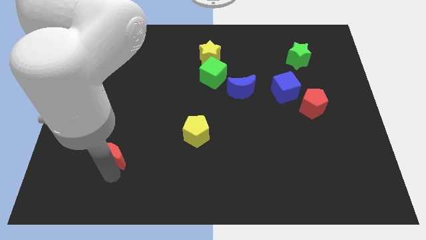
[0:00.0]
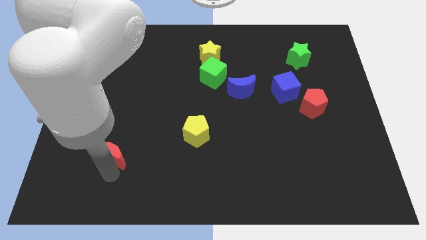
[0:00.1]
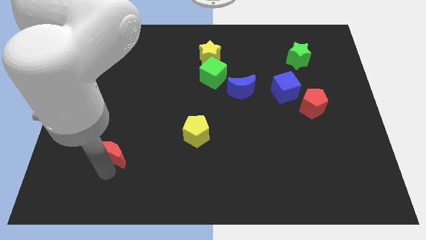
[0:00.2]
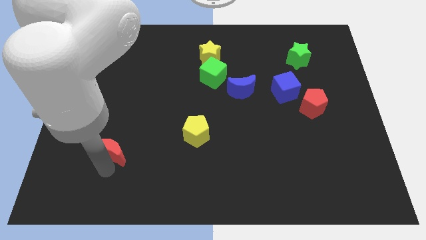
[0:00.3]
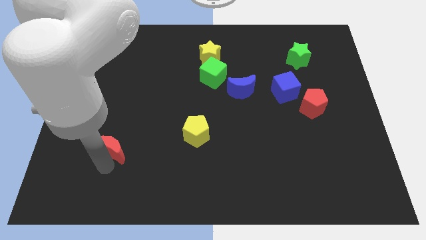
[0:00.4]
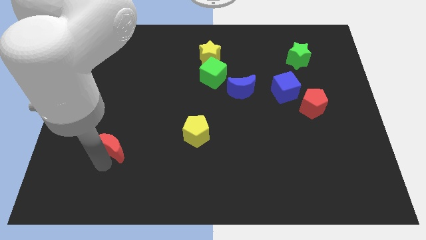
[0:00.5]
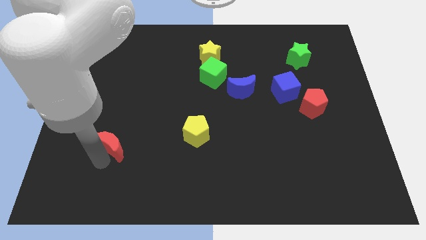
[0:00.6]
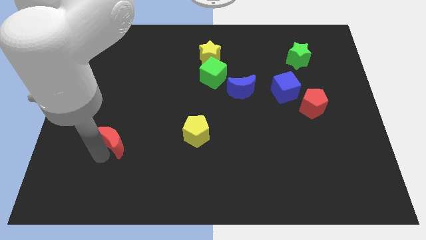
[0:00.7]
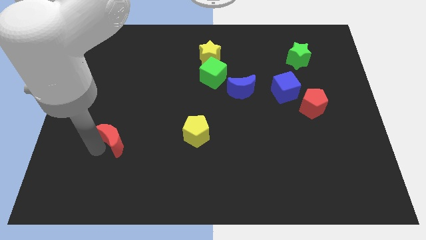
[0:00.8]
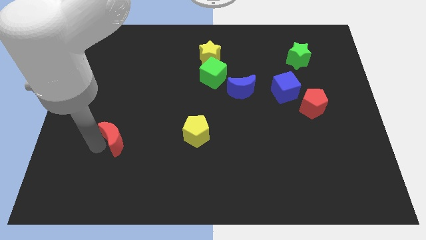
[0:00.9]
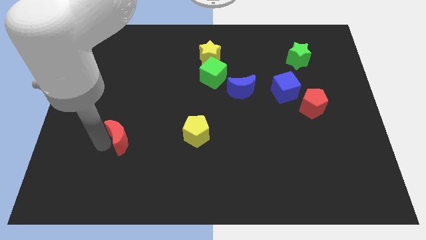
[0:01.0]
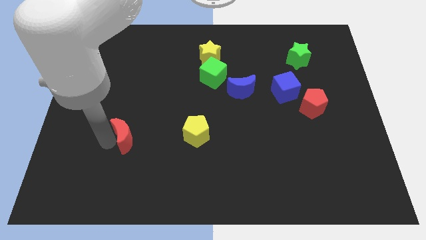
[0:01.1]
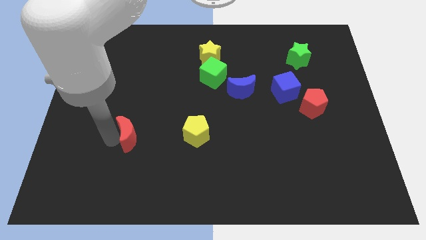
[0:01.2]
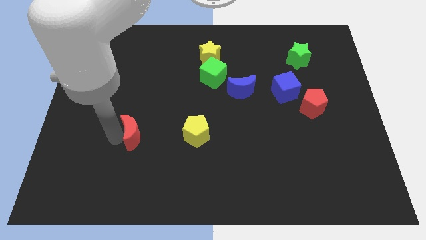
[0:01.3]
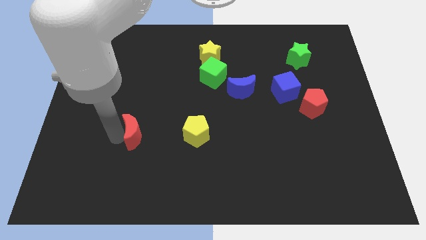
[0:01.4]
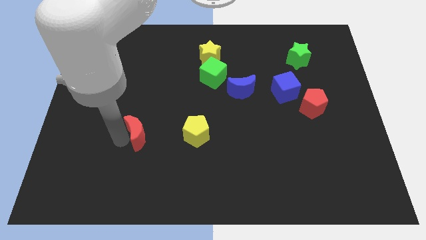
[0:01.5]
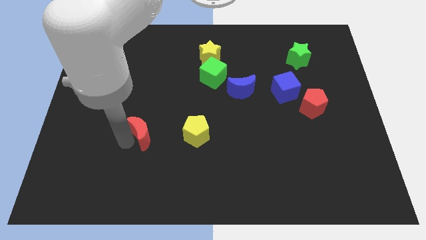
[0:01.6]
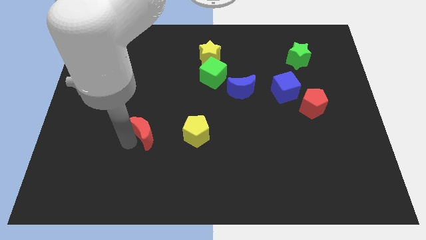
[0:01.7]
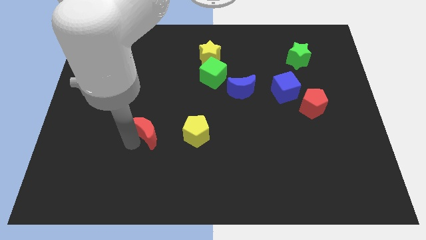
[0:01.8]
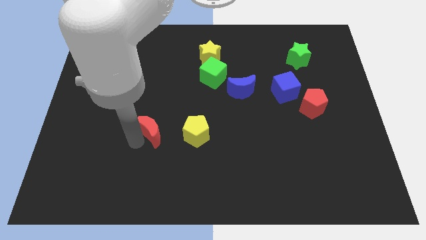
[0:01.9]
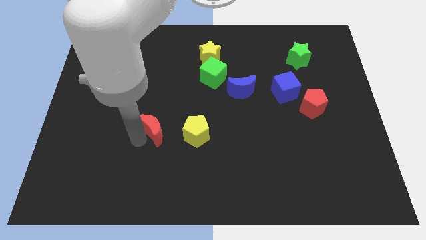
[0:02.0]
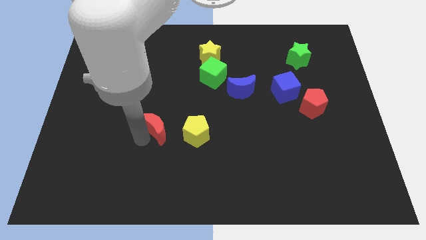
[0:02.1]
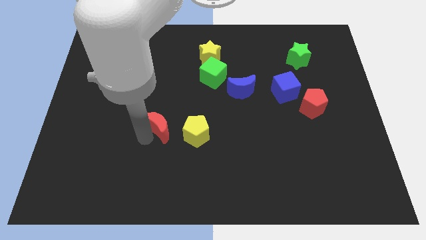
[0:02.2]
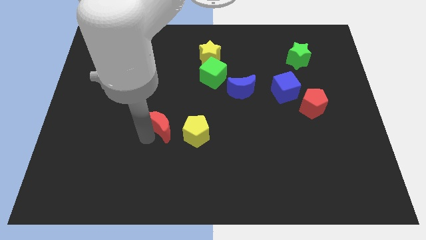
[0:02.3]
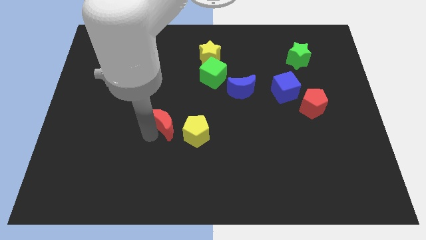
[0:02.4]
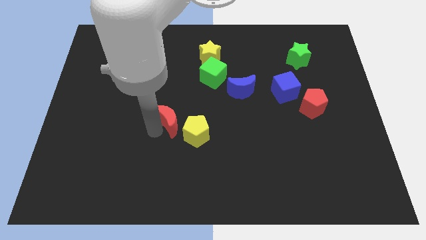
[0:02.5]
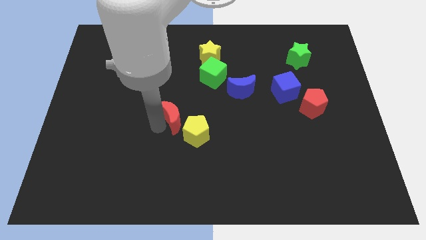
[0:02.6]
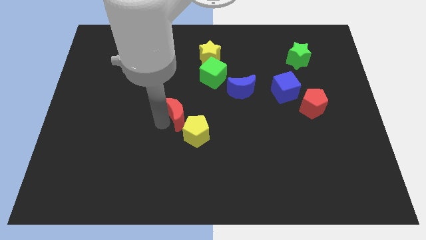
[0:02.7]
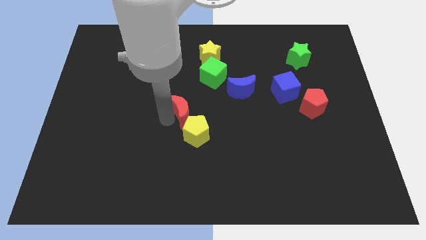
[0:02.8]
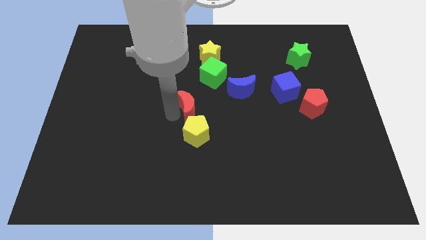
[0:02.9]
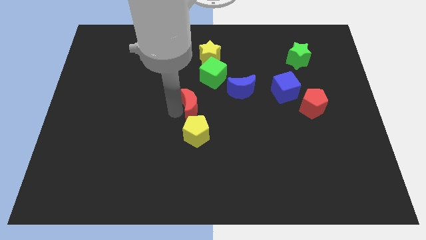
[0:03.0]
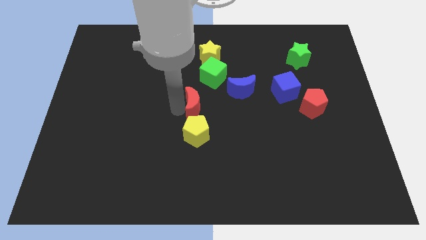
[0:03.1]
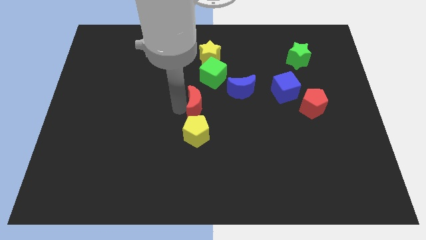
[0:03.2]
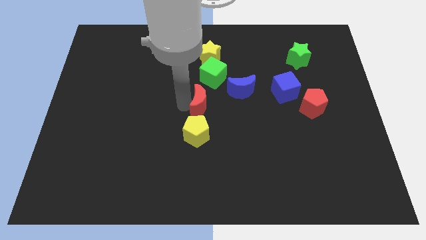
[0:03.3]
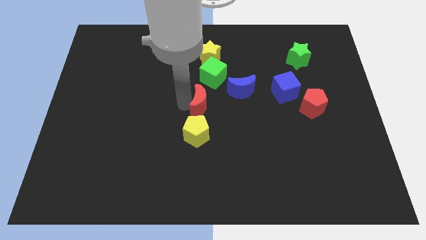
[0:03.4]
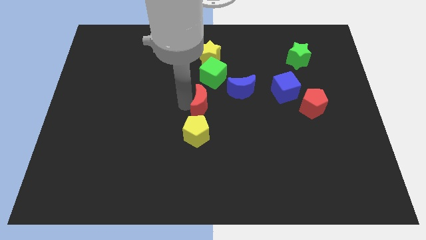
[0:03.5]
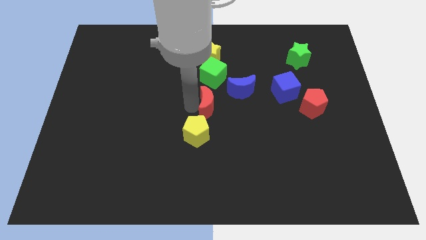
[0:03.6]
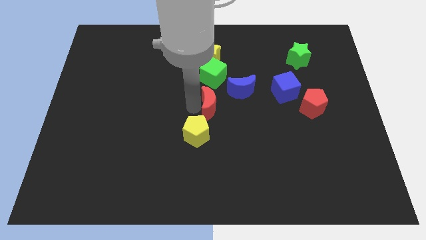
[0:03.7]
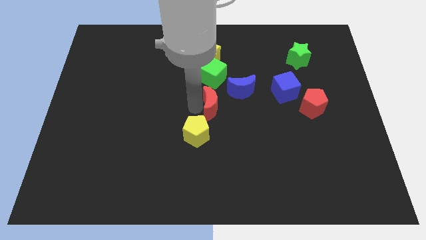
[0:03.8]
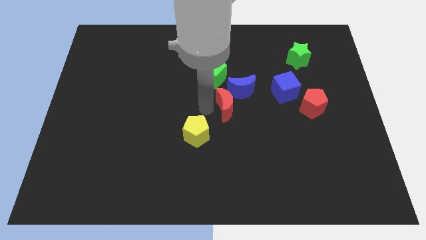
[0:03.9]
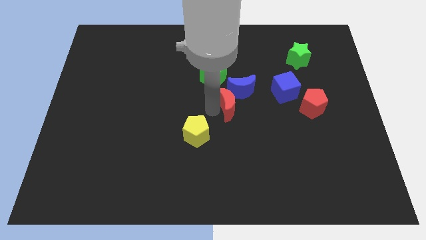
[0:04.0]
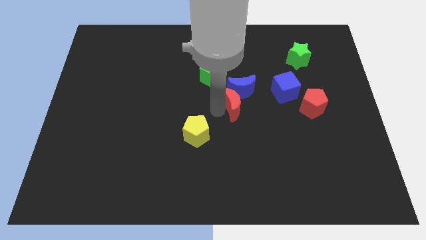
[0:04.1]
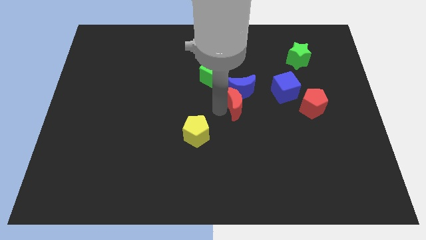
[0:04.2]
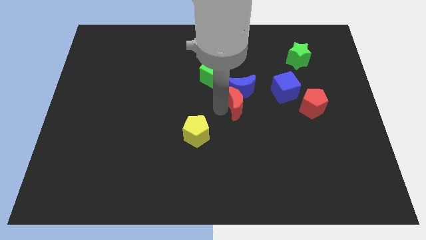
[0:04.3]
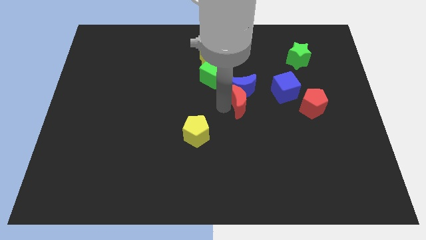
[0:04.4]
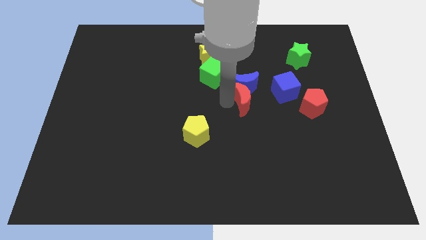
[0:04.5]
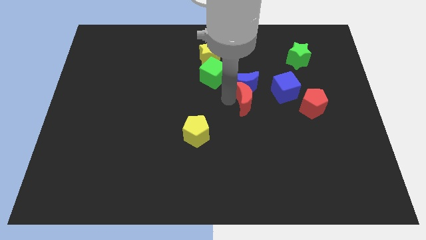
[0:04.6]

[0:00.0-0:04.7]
place the red crescent close to blue crescent

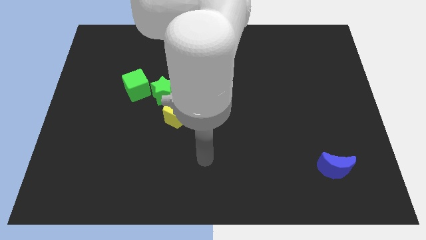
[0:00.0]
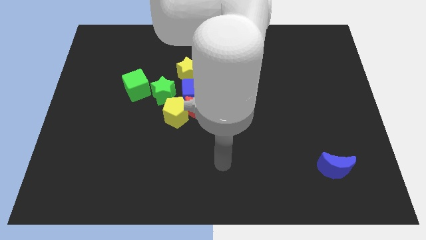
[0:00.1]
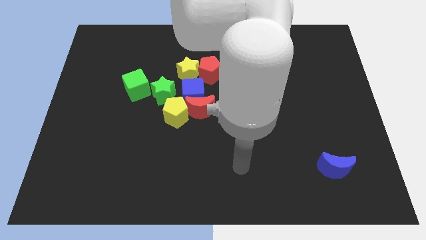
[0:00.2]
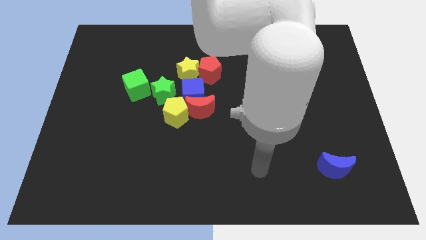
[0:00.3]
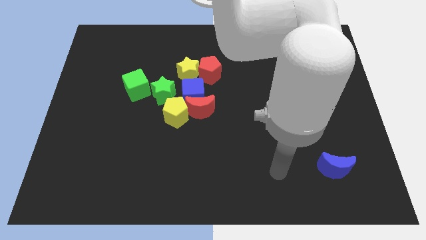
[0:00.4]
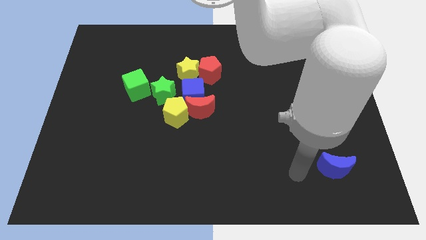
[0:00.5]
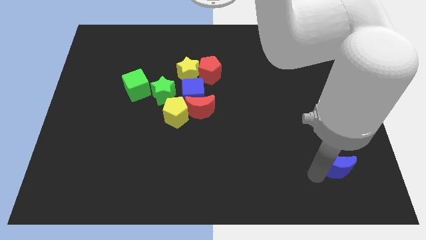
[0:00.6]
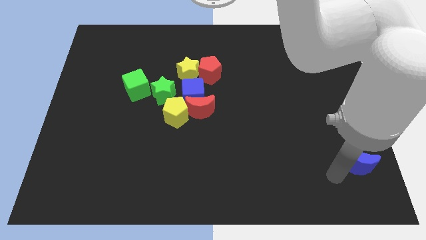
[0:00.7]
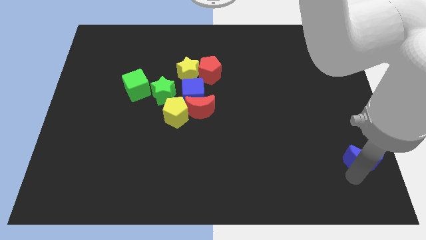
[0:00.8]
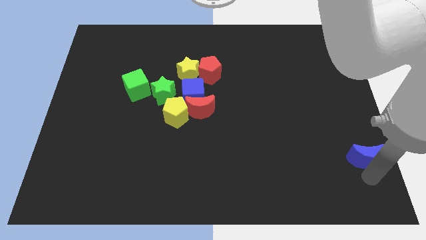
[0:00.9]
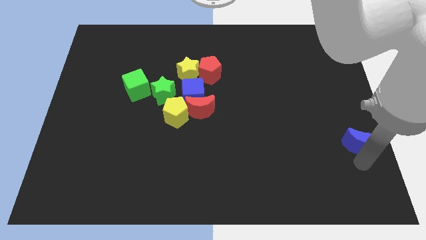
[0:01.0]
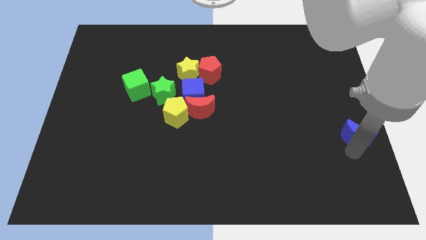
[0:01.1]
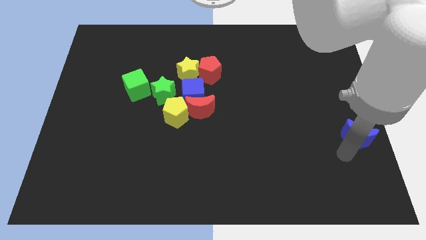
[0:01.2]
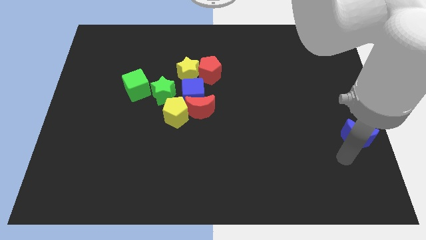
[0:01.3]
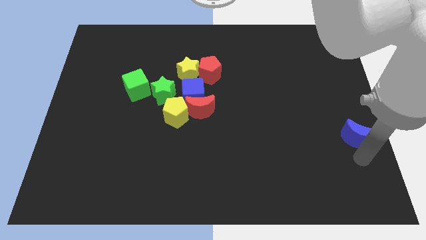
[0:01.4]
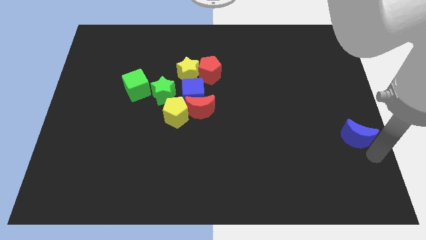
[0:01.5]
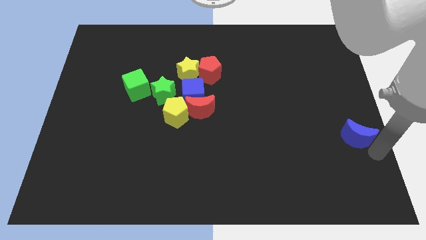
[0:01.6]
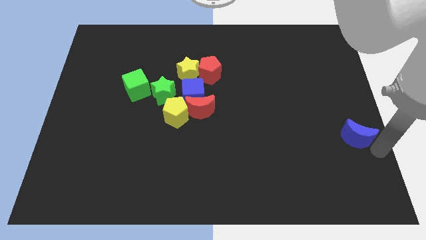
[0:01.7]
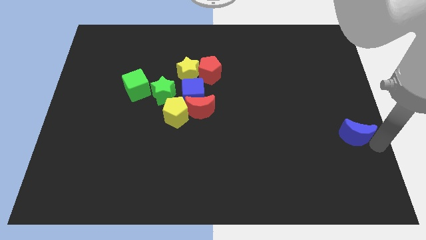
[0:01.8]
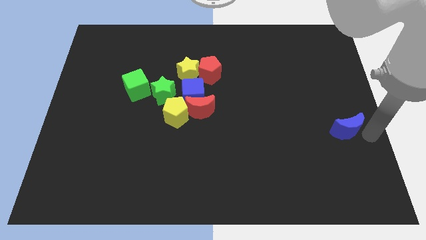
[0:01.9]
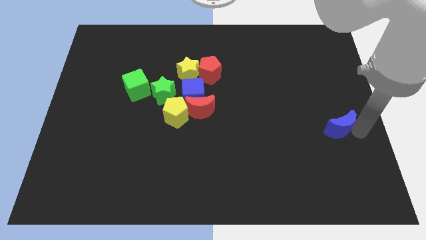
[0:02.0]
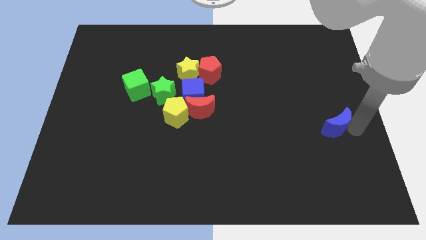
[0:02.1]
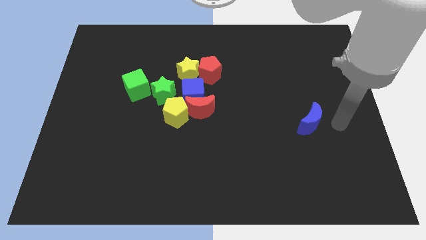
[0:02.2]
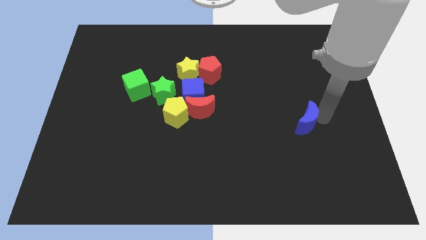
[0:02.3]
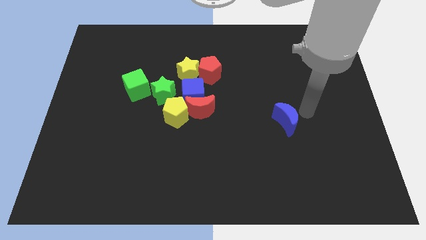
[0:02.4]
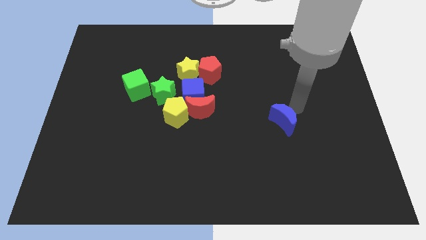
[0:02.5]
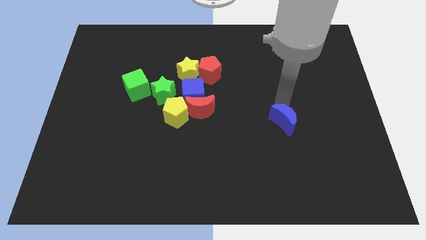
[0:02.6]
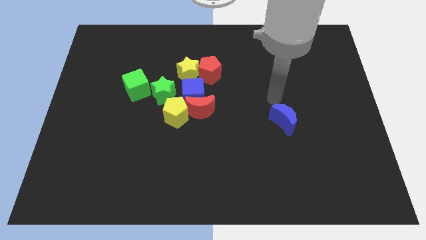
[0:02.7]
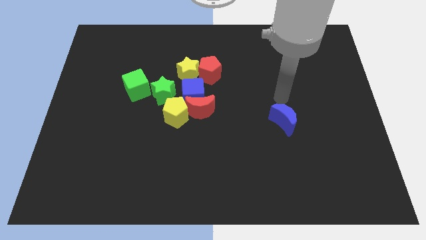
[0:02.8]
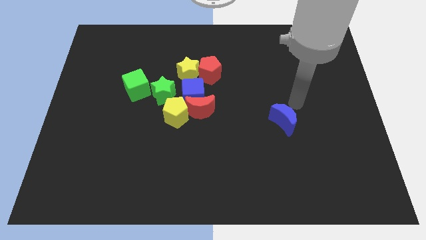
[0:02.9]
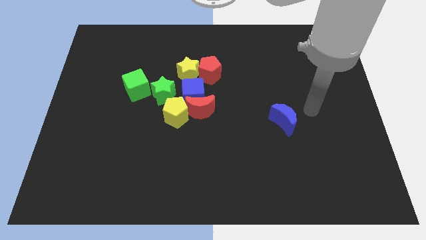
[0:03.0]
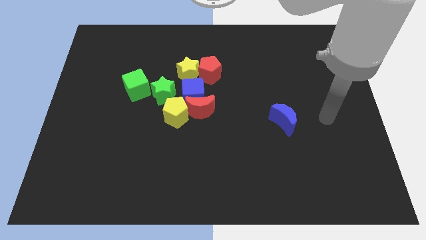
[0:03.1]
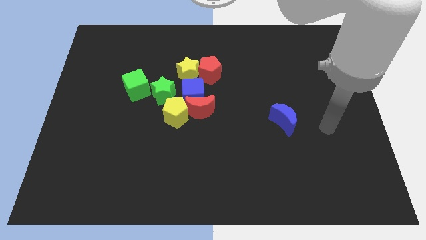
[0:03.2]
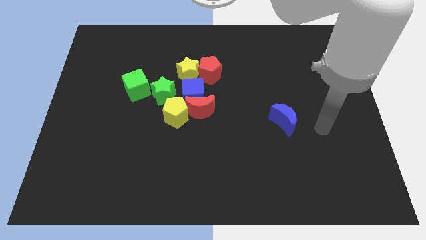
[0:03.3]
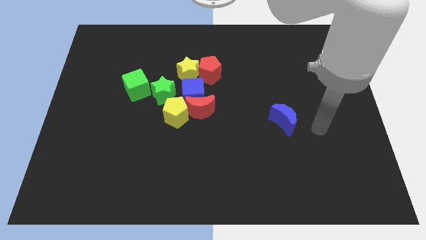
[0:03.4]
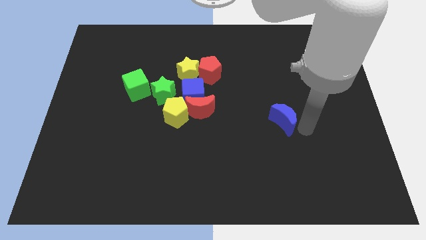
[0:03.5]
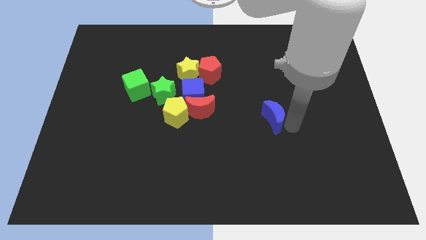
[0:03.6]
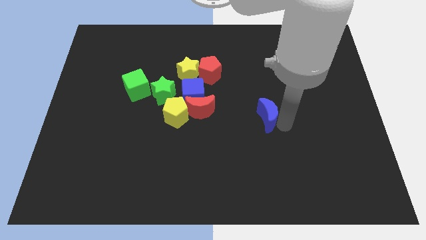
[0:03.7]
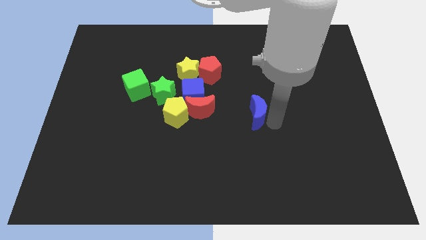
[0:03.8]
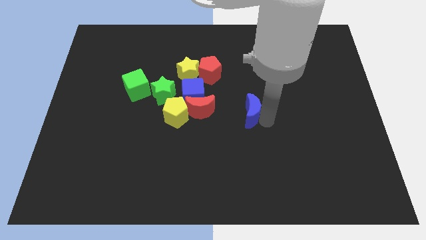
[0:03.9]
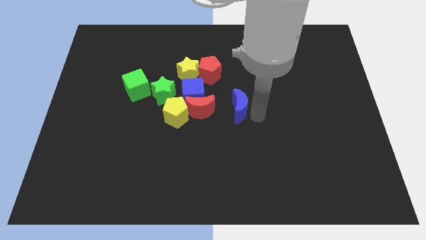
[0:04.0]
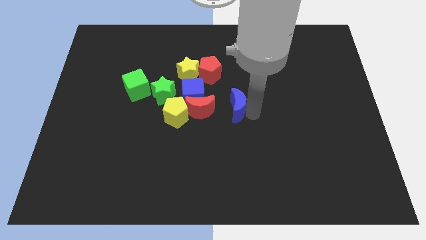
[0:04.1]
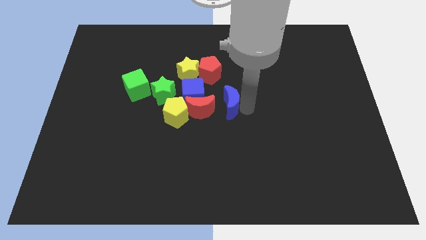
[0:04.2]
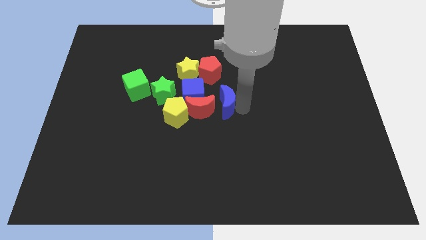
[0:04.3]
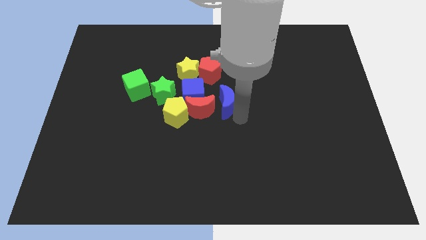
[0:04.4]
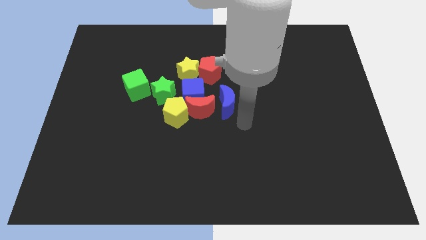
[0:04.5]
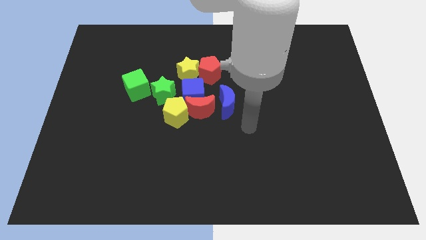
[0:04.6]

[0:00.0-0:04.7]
push the blue crescent right to the red crescent
